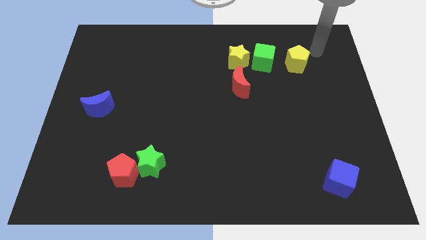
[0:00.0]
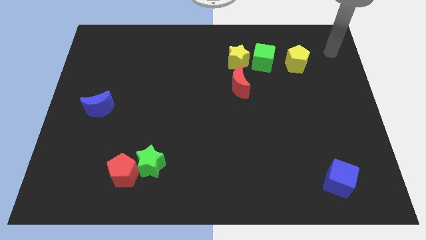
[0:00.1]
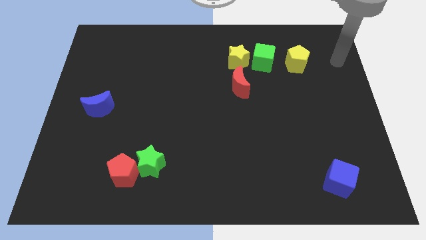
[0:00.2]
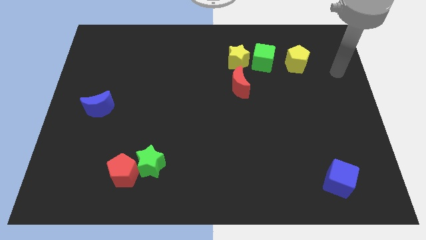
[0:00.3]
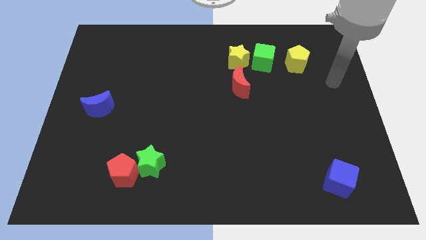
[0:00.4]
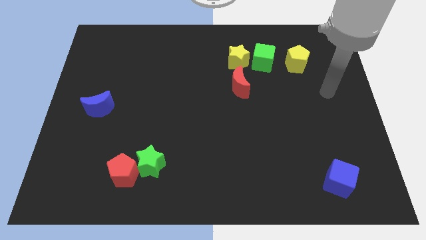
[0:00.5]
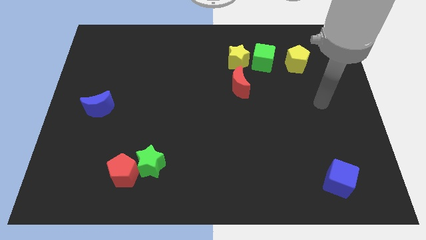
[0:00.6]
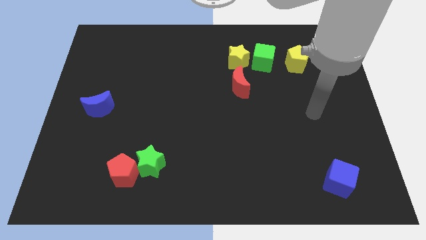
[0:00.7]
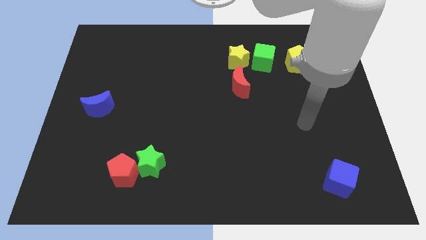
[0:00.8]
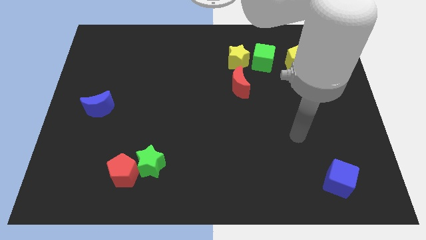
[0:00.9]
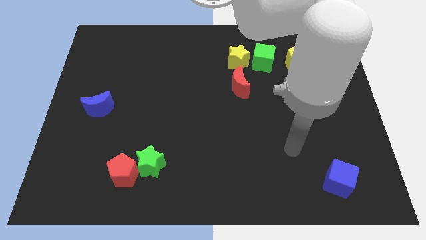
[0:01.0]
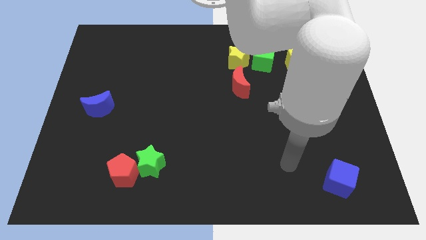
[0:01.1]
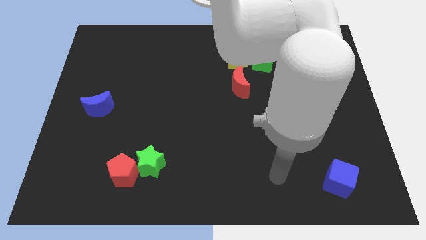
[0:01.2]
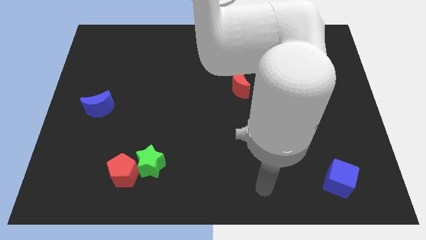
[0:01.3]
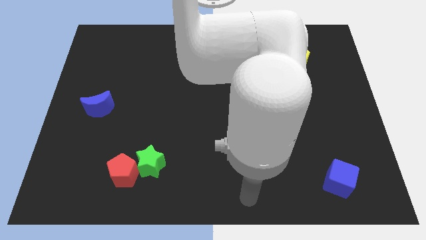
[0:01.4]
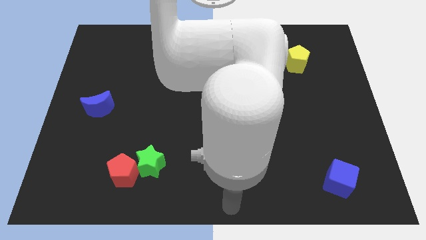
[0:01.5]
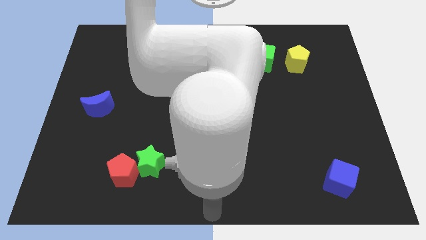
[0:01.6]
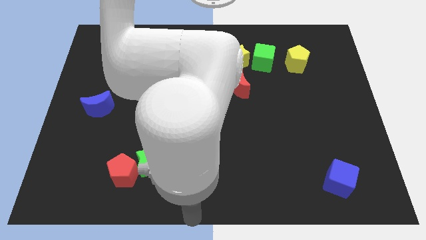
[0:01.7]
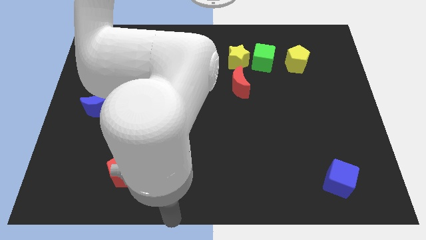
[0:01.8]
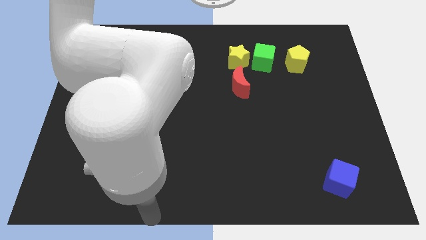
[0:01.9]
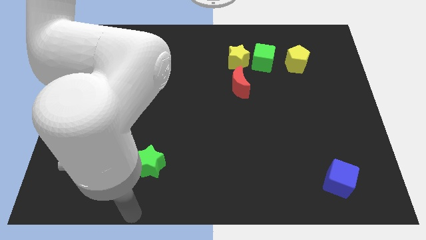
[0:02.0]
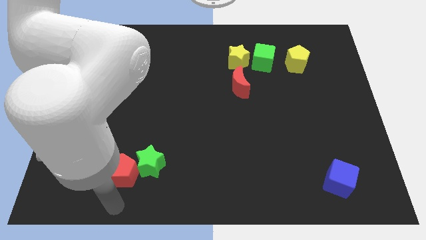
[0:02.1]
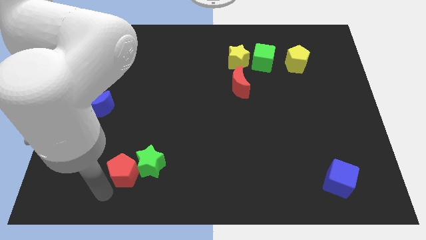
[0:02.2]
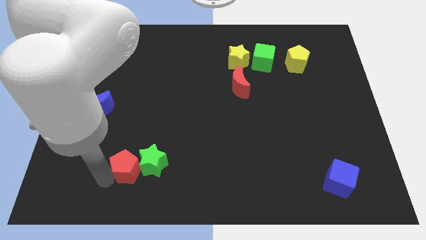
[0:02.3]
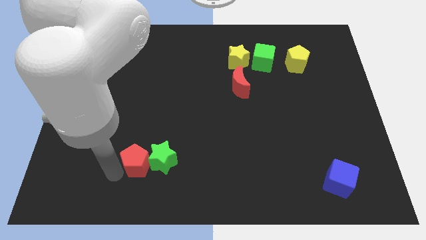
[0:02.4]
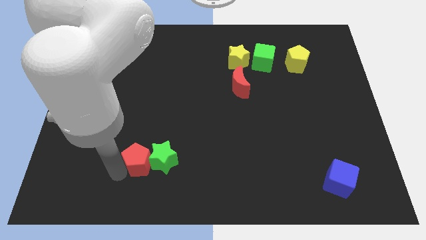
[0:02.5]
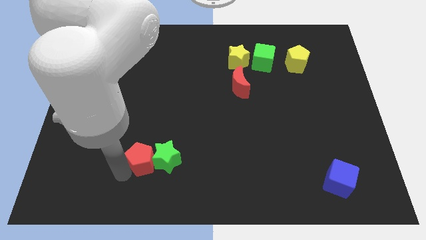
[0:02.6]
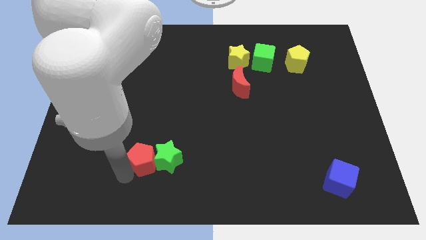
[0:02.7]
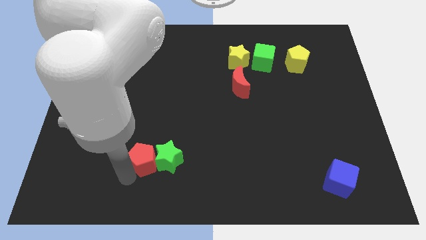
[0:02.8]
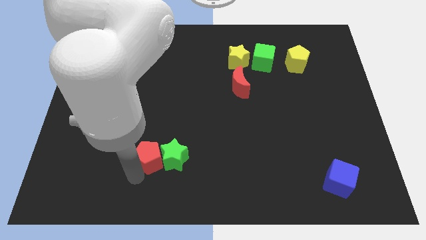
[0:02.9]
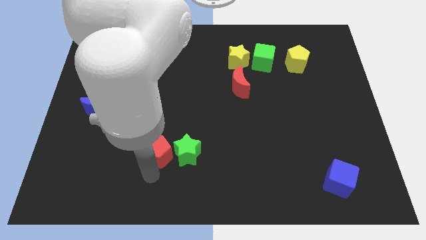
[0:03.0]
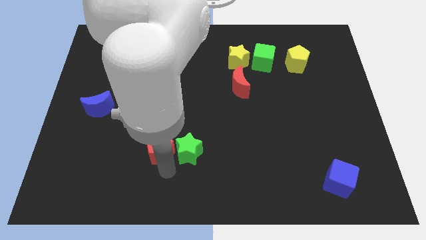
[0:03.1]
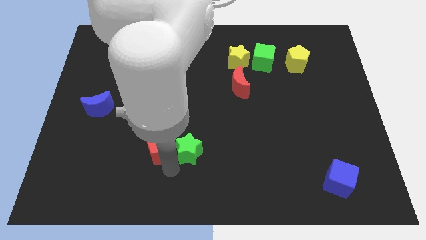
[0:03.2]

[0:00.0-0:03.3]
push the green star and red pentagon upwards

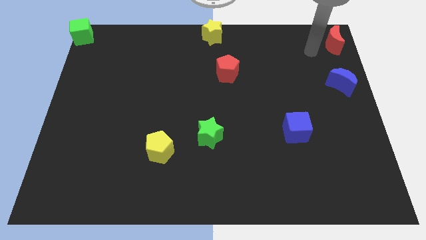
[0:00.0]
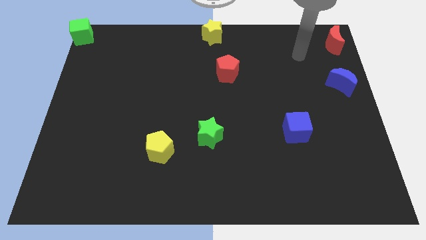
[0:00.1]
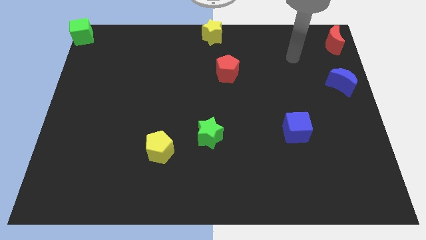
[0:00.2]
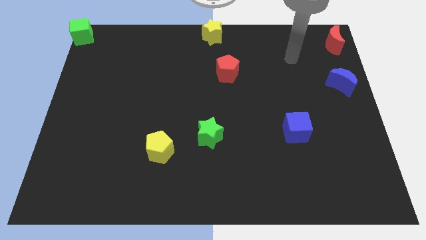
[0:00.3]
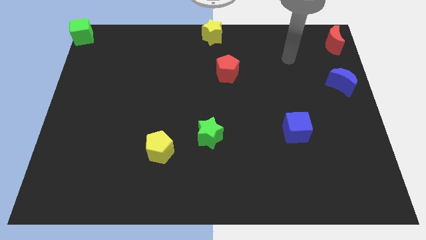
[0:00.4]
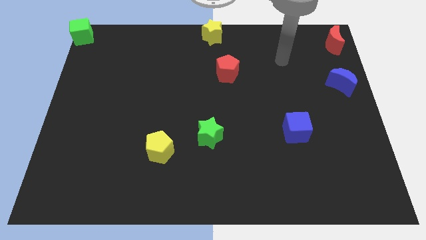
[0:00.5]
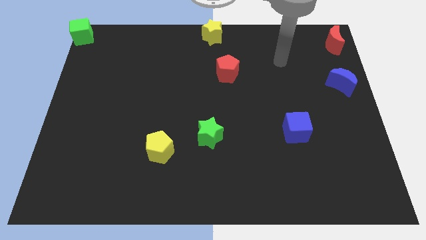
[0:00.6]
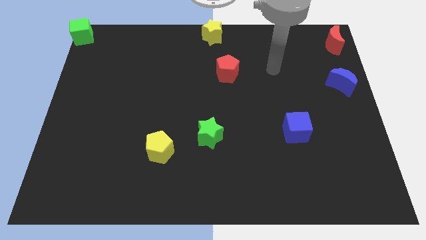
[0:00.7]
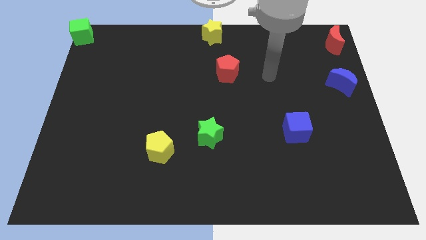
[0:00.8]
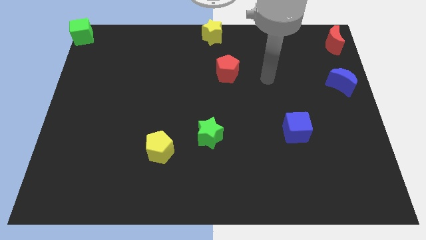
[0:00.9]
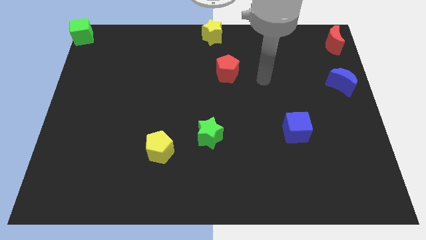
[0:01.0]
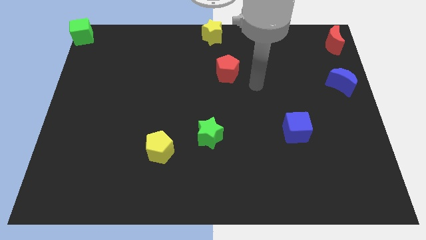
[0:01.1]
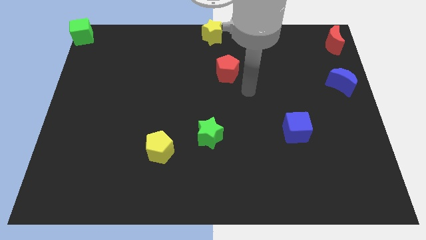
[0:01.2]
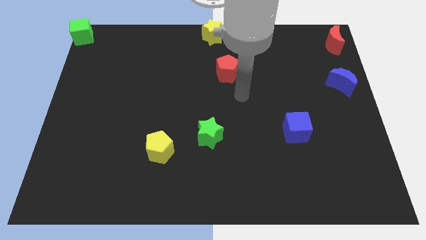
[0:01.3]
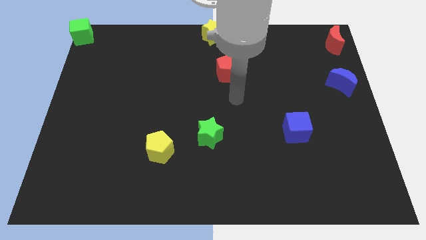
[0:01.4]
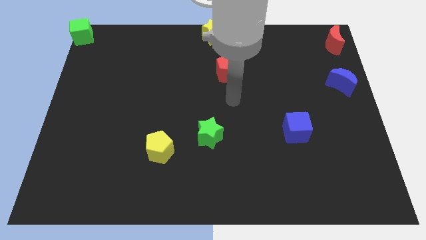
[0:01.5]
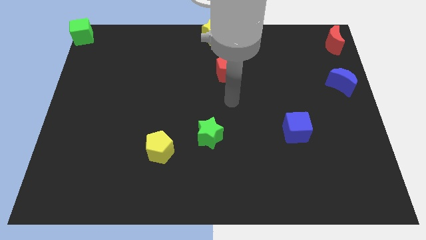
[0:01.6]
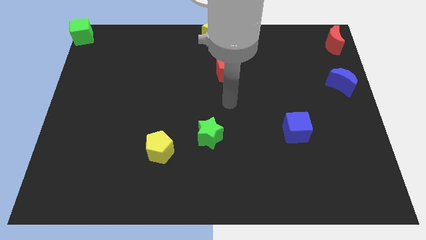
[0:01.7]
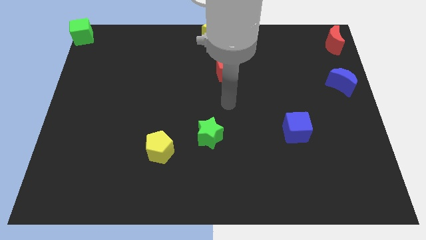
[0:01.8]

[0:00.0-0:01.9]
move the arm to the bottom of the red pentagon

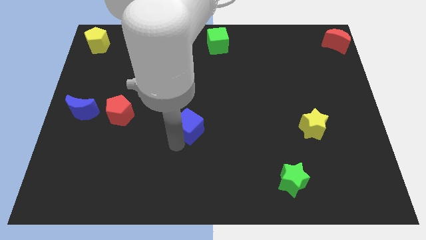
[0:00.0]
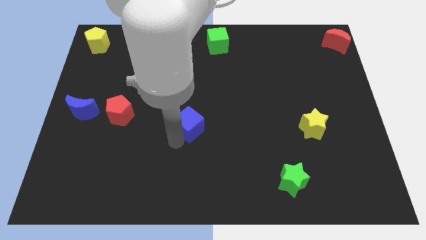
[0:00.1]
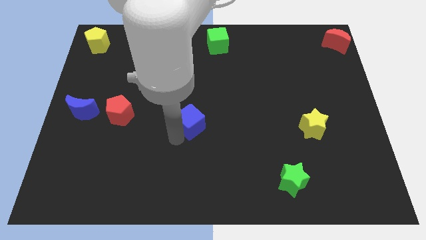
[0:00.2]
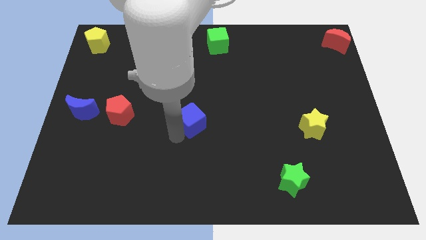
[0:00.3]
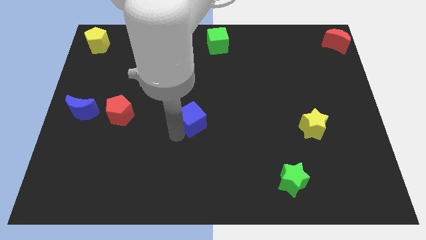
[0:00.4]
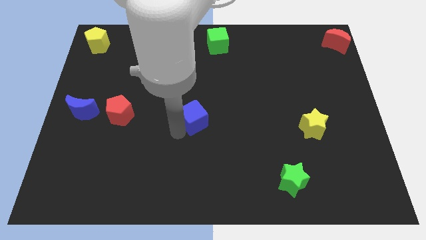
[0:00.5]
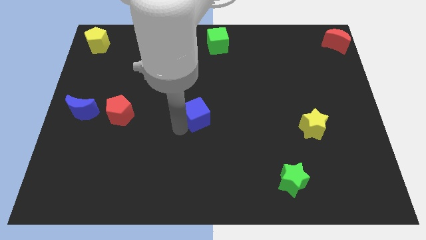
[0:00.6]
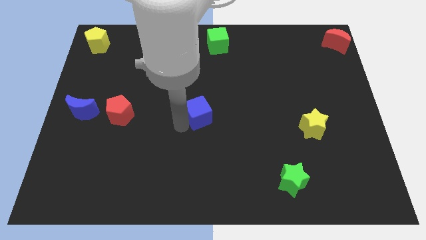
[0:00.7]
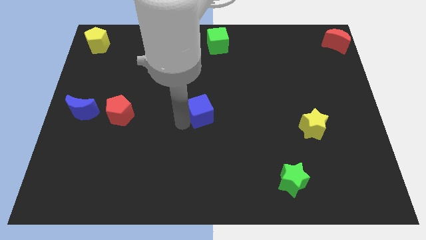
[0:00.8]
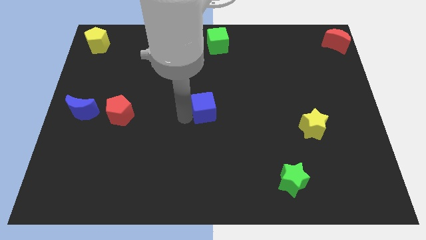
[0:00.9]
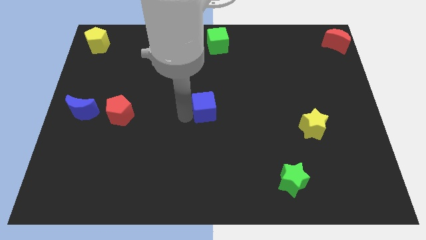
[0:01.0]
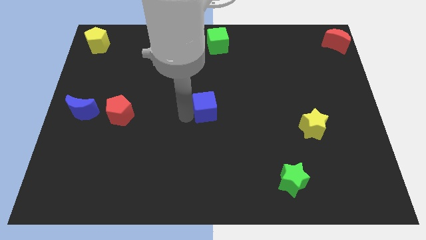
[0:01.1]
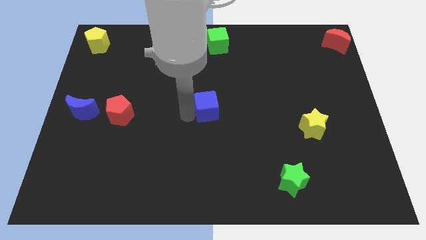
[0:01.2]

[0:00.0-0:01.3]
move the blue cube towards up

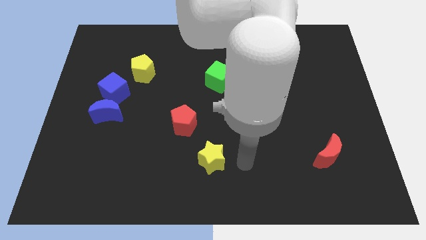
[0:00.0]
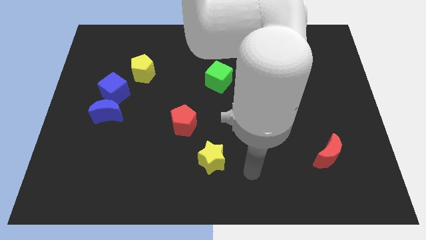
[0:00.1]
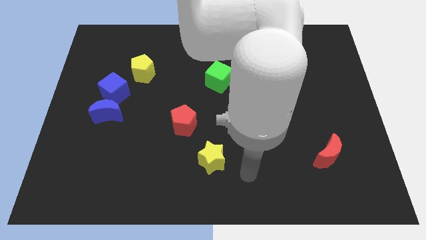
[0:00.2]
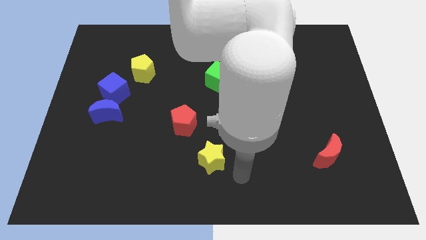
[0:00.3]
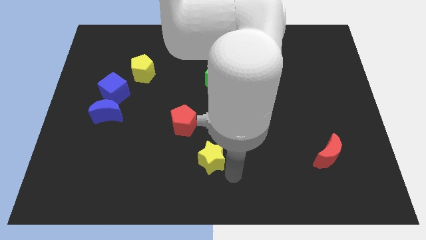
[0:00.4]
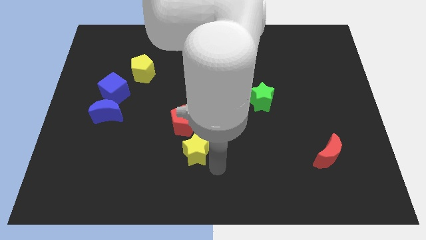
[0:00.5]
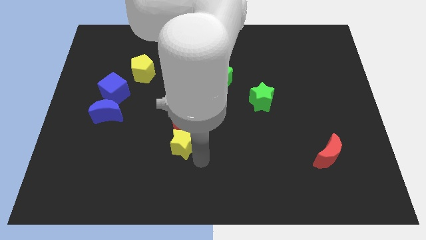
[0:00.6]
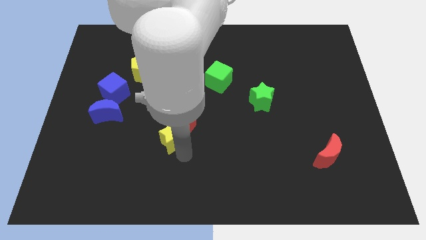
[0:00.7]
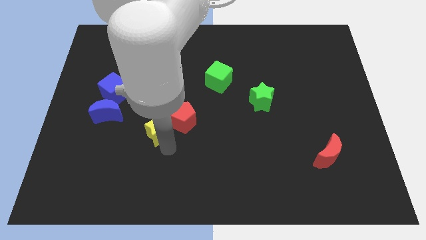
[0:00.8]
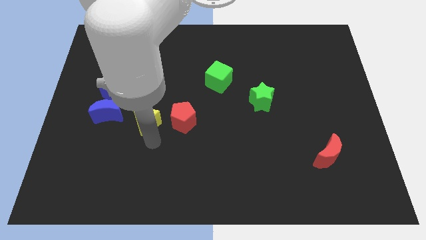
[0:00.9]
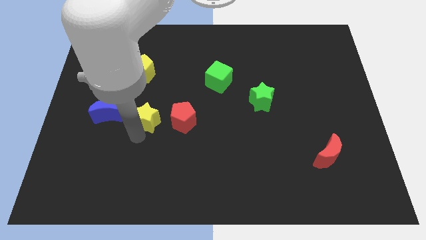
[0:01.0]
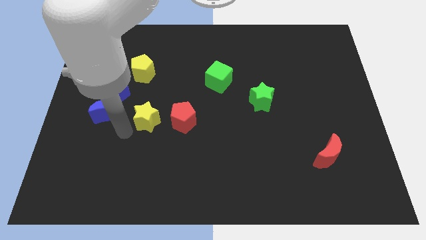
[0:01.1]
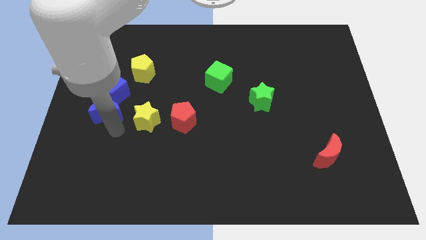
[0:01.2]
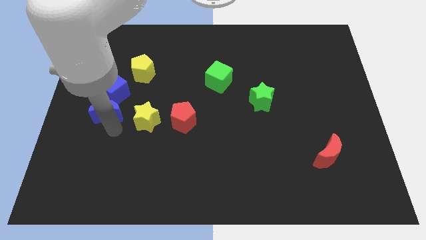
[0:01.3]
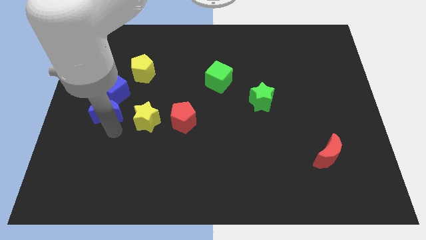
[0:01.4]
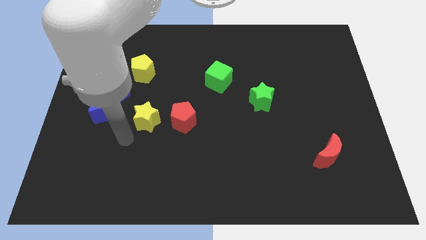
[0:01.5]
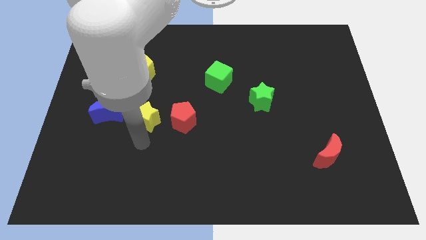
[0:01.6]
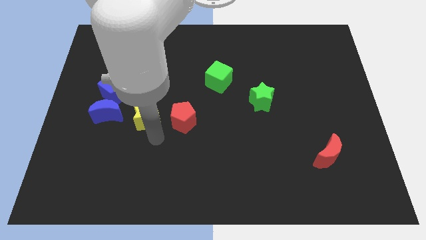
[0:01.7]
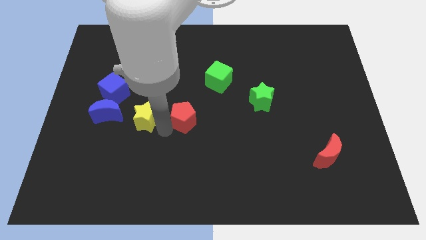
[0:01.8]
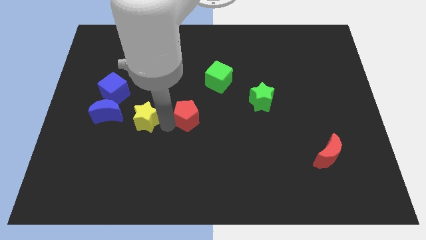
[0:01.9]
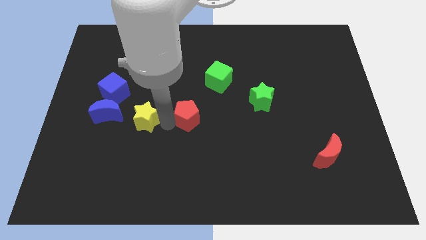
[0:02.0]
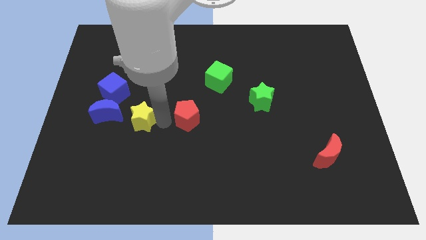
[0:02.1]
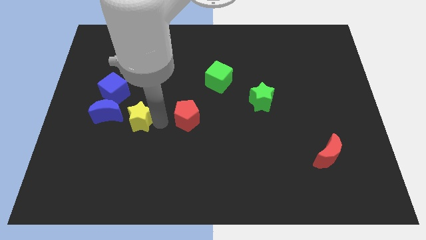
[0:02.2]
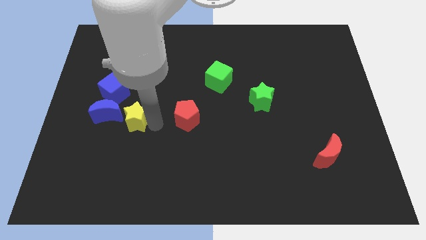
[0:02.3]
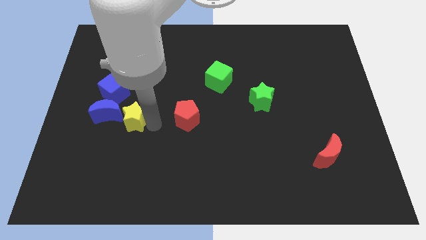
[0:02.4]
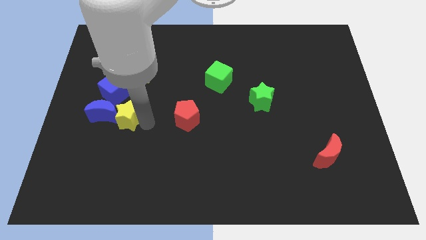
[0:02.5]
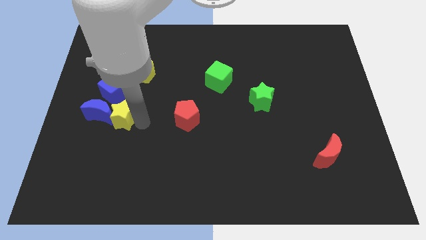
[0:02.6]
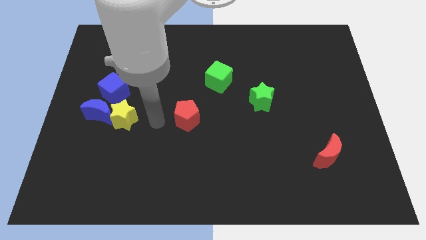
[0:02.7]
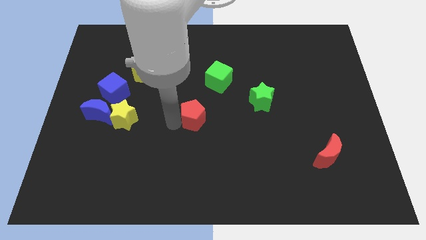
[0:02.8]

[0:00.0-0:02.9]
push the yellow pentagon into the blue crescent
